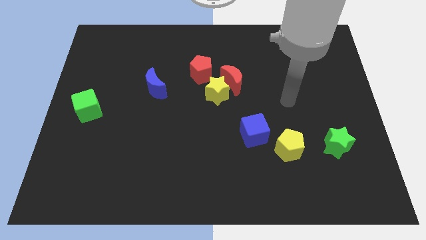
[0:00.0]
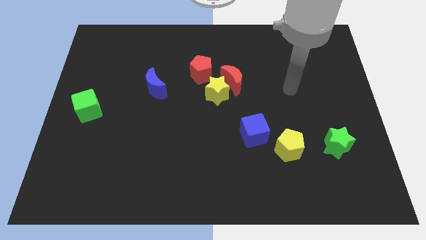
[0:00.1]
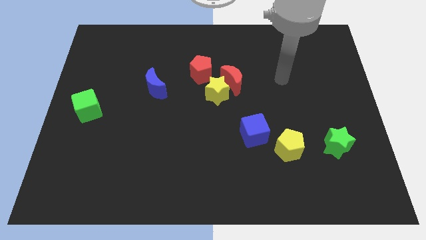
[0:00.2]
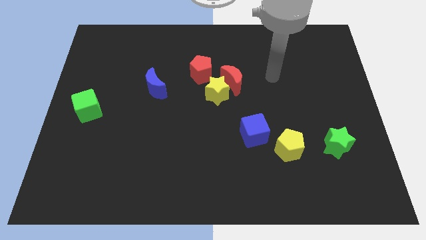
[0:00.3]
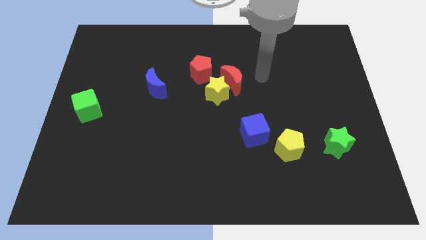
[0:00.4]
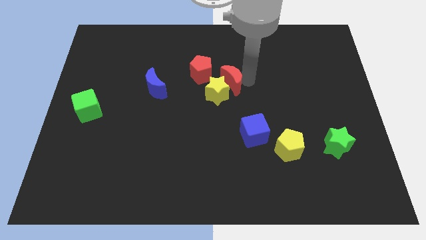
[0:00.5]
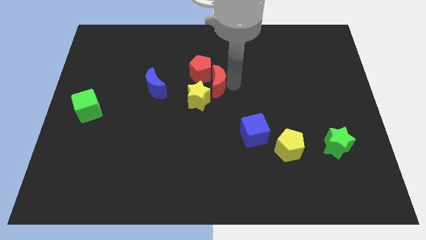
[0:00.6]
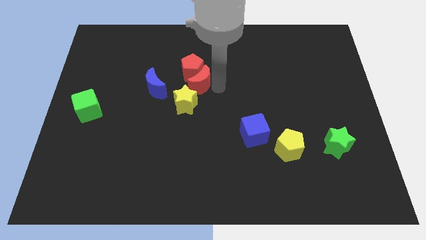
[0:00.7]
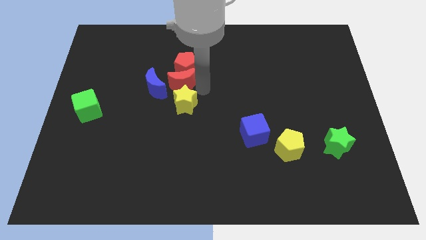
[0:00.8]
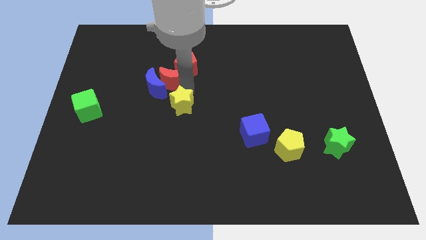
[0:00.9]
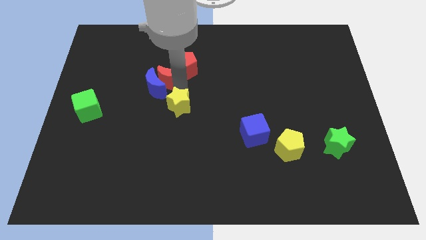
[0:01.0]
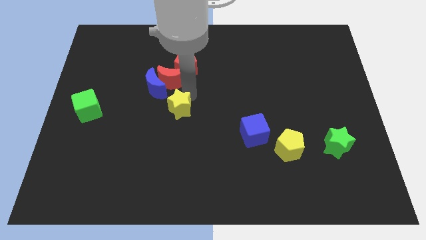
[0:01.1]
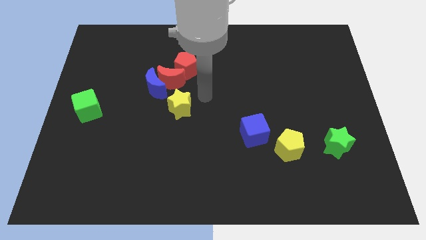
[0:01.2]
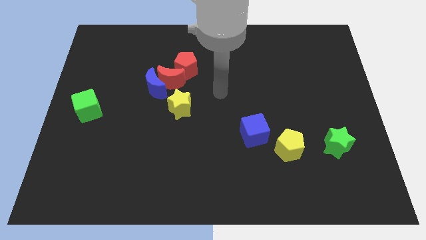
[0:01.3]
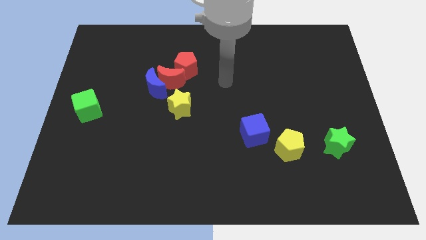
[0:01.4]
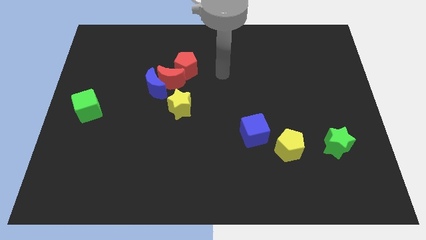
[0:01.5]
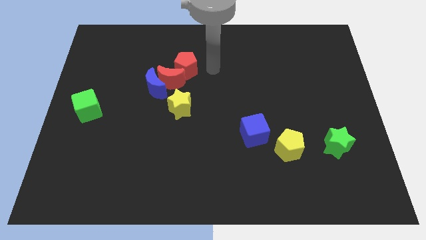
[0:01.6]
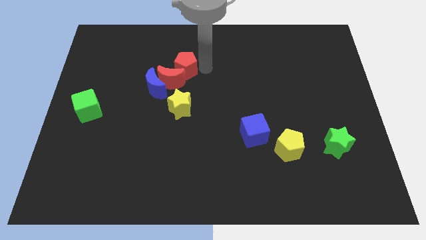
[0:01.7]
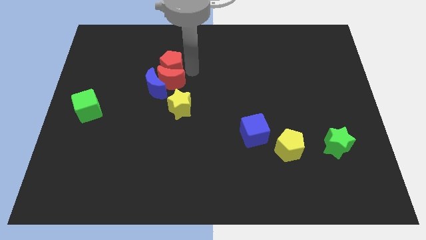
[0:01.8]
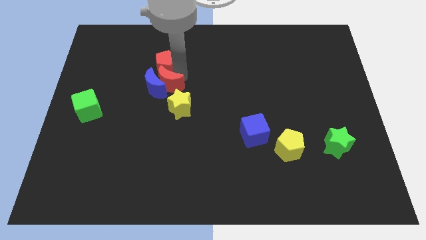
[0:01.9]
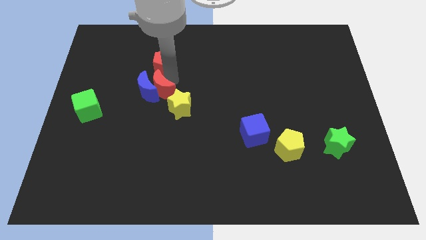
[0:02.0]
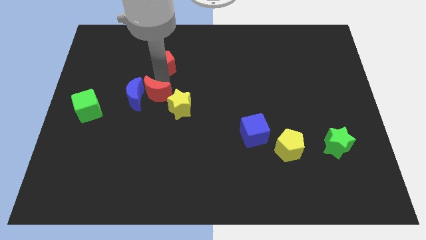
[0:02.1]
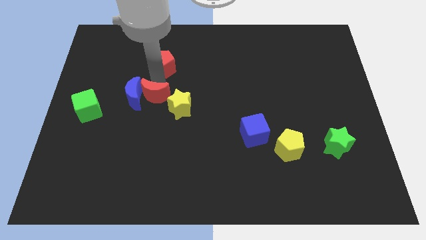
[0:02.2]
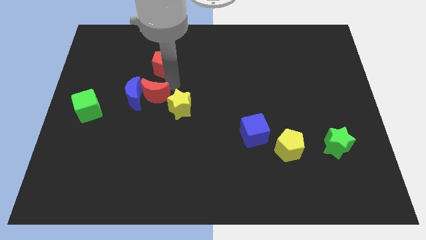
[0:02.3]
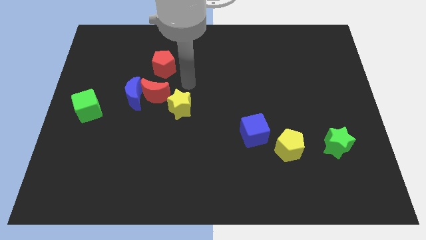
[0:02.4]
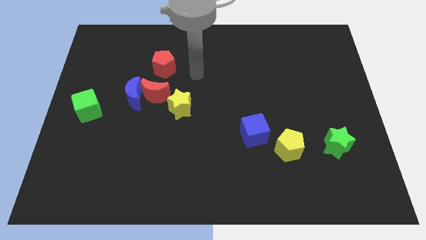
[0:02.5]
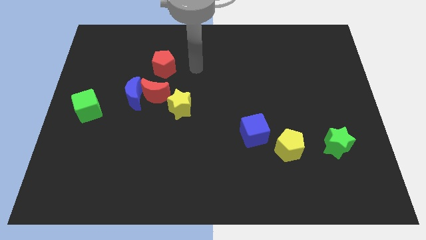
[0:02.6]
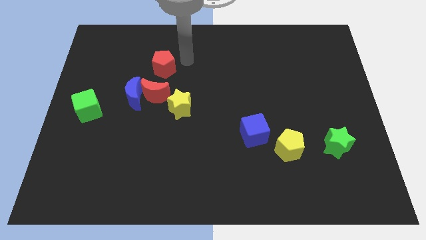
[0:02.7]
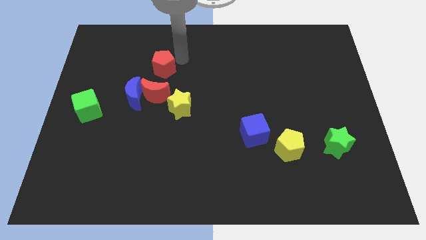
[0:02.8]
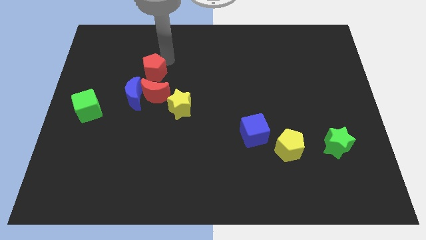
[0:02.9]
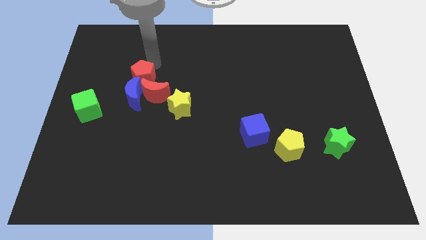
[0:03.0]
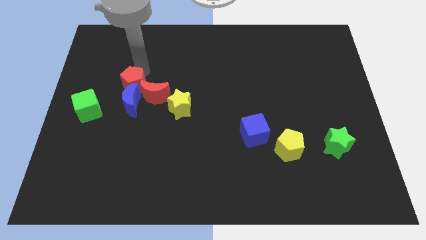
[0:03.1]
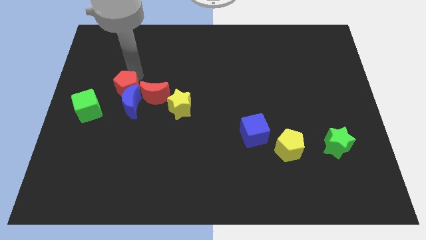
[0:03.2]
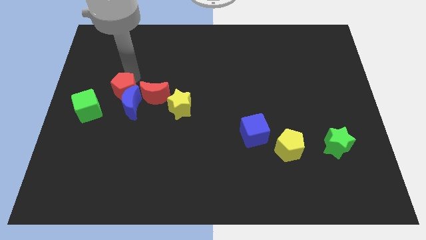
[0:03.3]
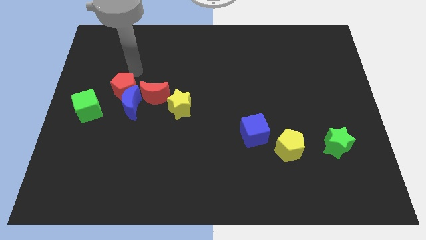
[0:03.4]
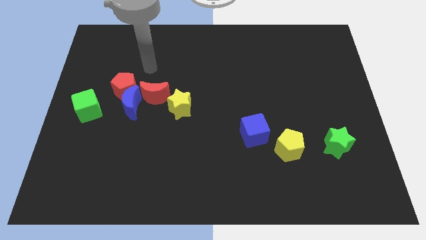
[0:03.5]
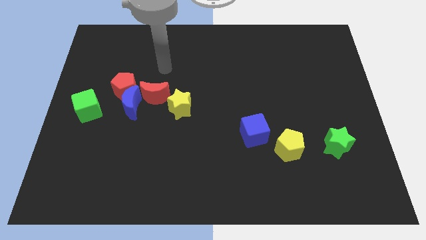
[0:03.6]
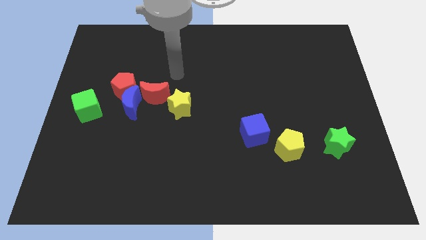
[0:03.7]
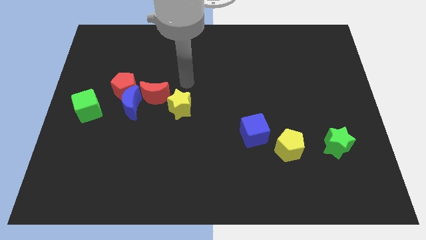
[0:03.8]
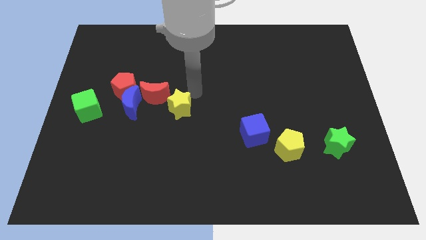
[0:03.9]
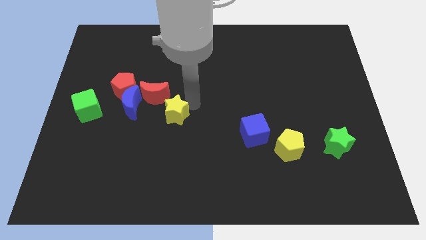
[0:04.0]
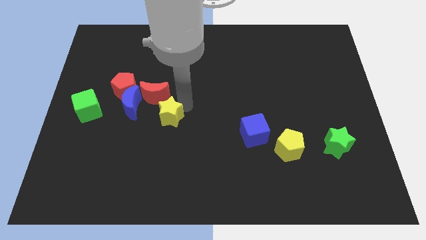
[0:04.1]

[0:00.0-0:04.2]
move the group of blocks to the bottom of the board

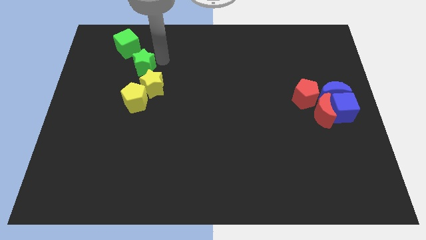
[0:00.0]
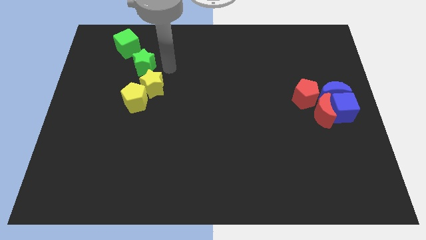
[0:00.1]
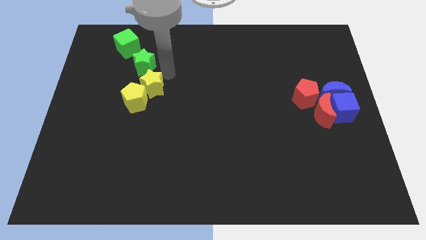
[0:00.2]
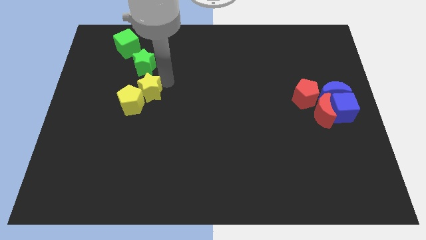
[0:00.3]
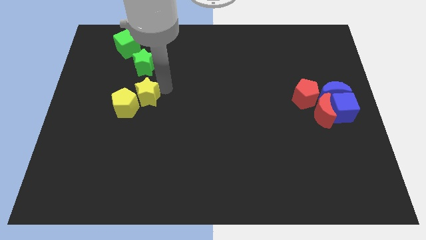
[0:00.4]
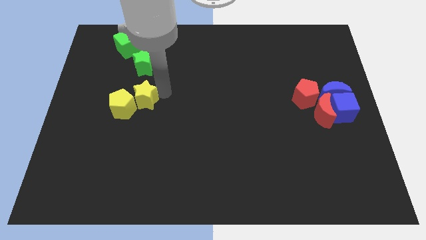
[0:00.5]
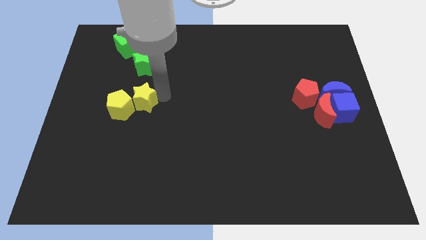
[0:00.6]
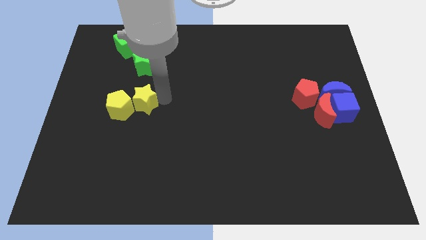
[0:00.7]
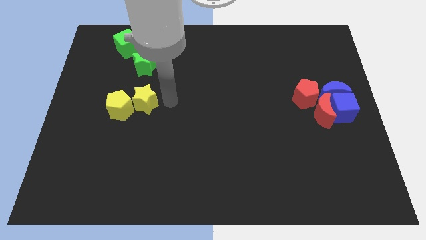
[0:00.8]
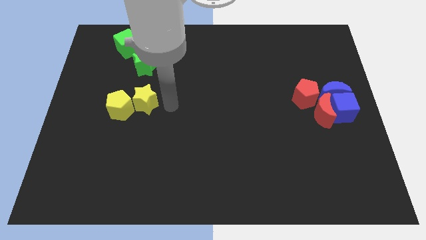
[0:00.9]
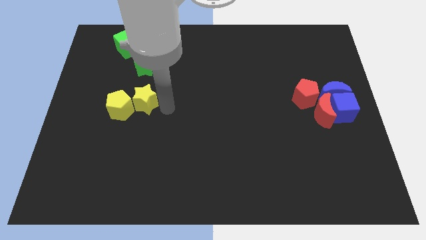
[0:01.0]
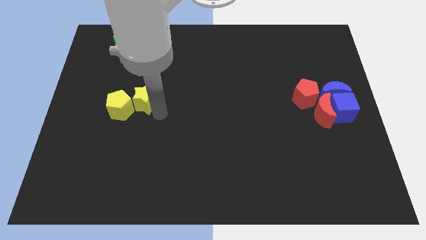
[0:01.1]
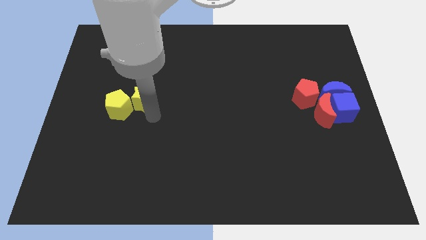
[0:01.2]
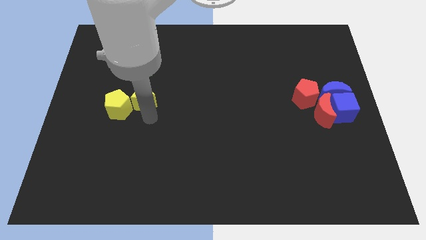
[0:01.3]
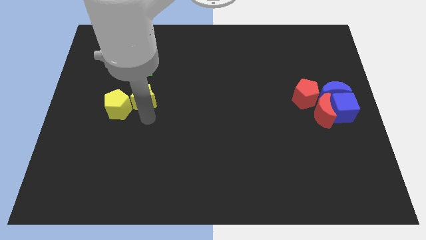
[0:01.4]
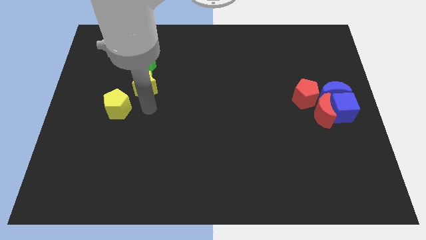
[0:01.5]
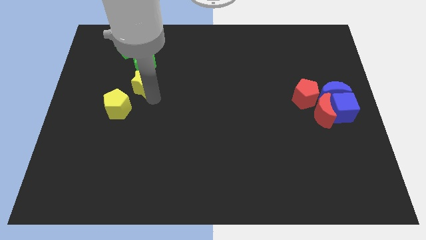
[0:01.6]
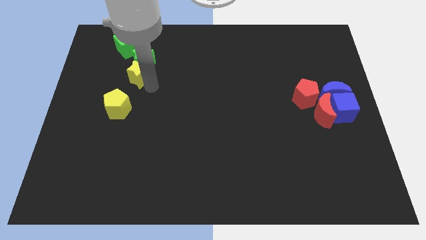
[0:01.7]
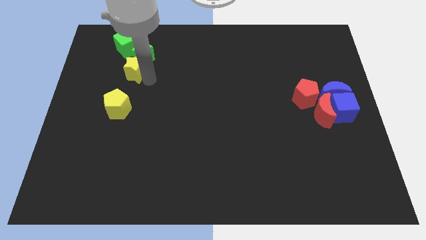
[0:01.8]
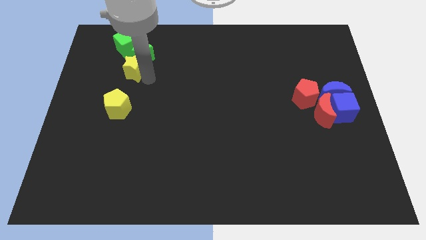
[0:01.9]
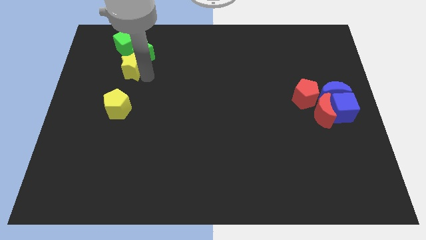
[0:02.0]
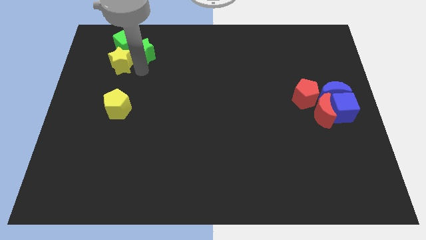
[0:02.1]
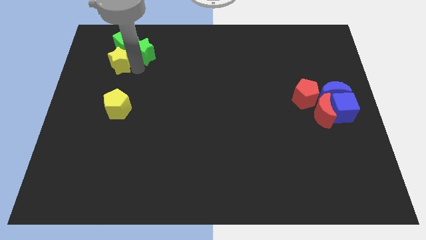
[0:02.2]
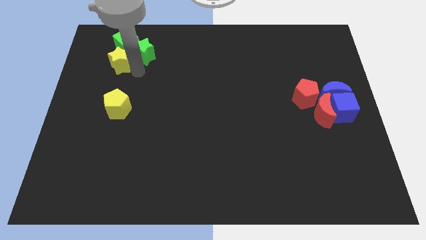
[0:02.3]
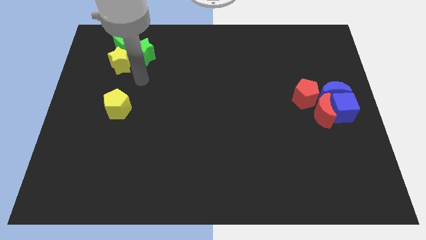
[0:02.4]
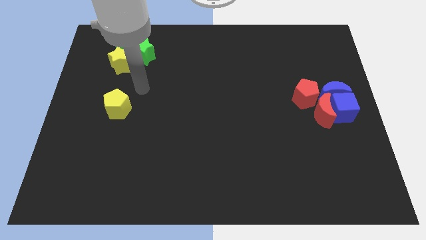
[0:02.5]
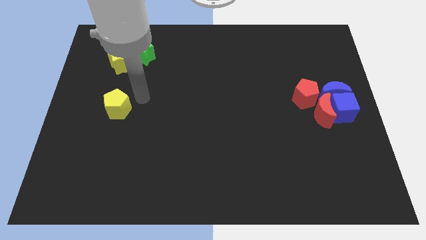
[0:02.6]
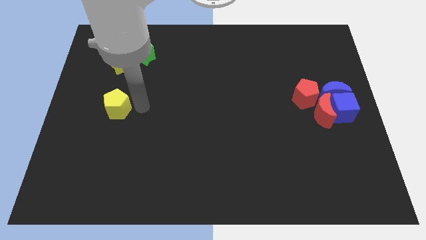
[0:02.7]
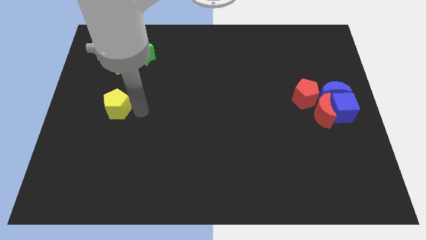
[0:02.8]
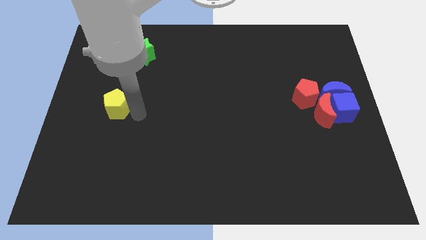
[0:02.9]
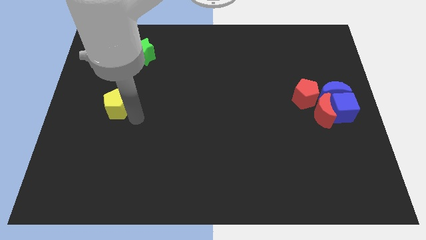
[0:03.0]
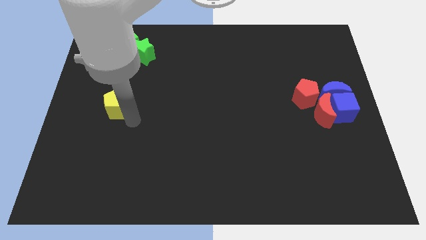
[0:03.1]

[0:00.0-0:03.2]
place the yellow star above the yellow pentagon

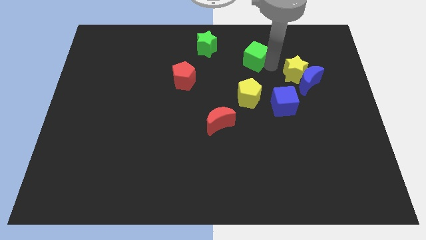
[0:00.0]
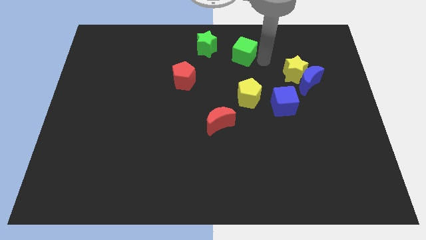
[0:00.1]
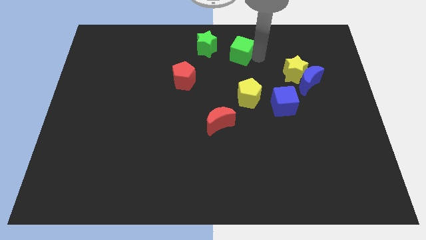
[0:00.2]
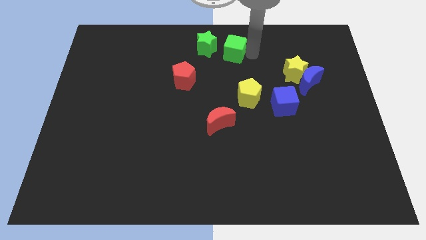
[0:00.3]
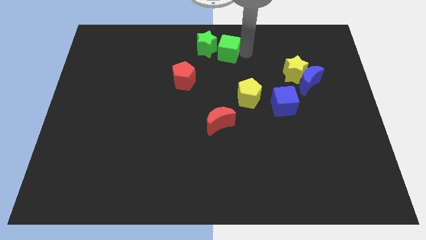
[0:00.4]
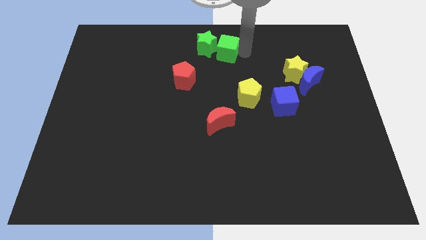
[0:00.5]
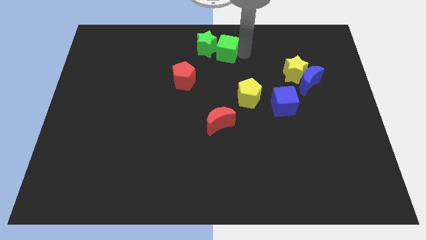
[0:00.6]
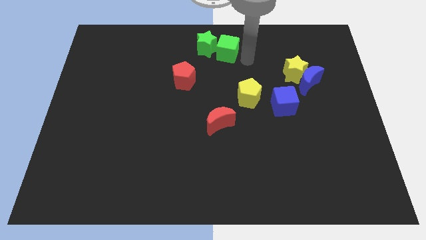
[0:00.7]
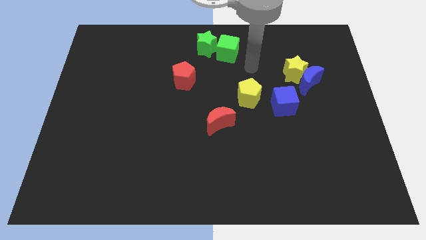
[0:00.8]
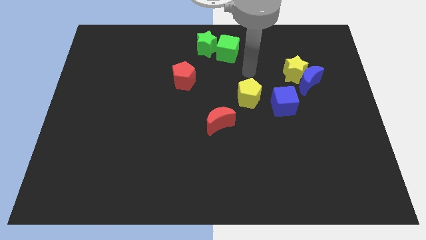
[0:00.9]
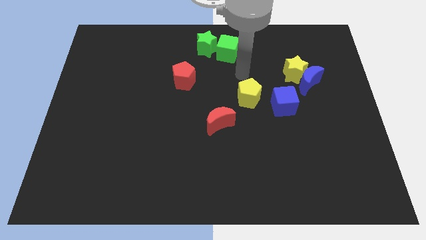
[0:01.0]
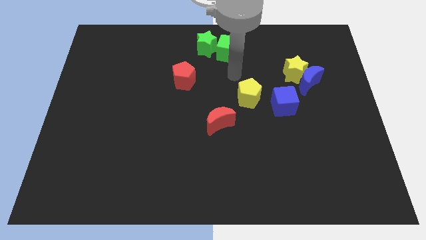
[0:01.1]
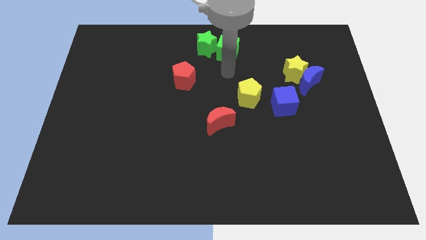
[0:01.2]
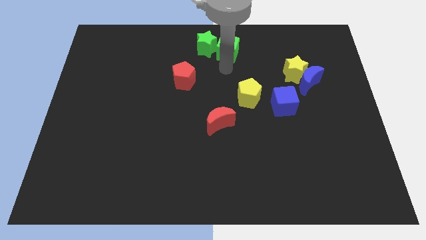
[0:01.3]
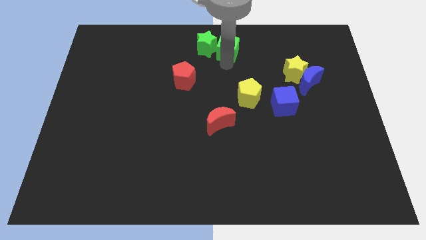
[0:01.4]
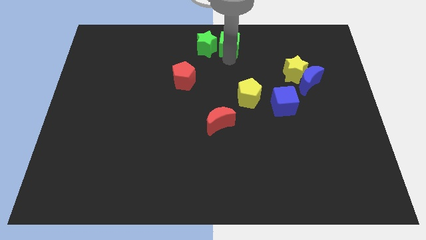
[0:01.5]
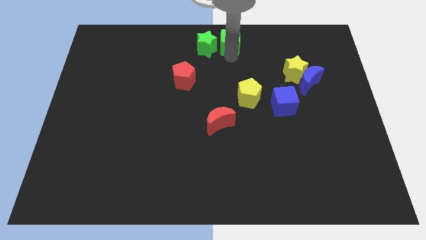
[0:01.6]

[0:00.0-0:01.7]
place the green cube to the right of the green star
